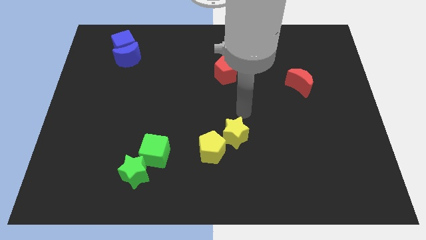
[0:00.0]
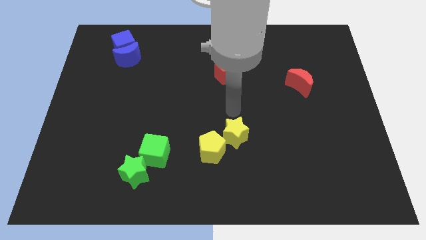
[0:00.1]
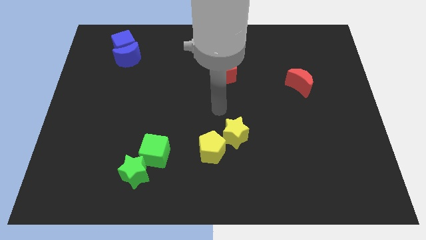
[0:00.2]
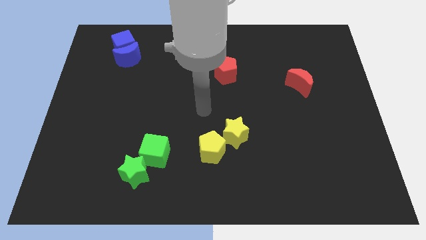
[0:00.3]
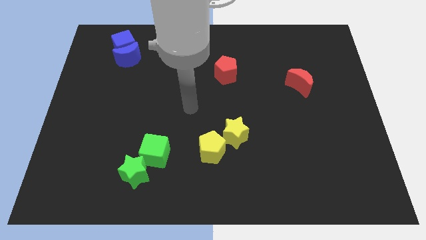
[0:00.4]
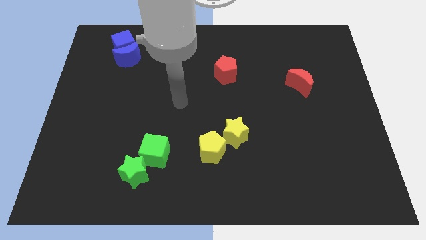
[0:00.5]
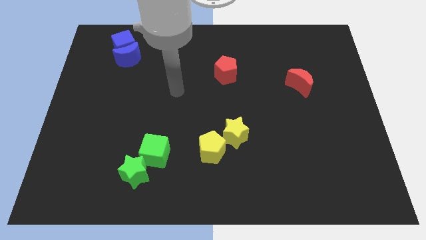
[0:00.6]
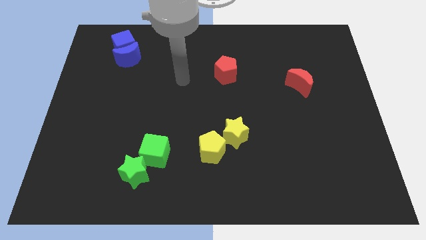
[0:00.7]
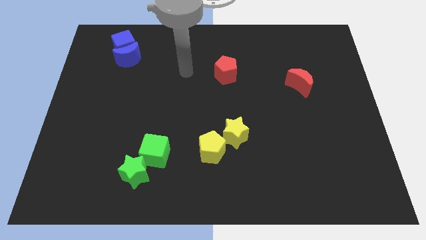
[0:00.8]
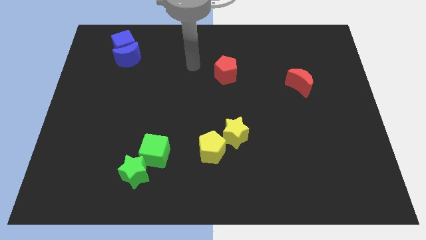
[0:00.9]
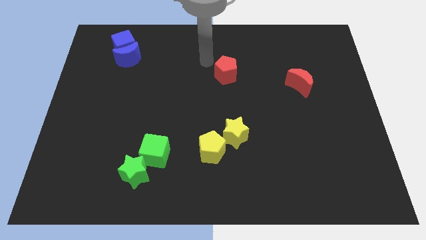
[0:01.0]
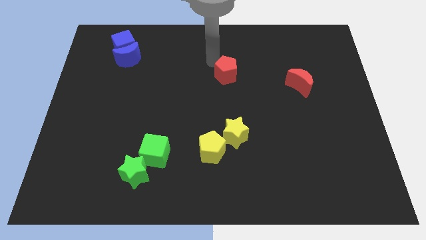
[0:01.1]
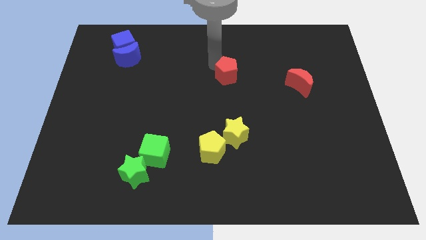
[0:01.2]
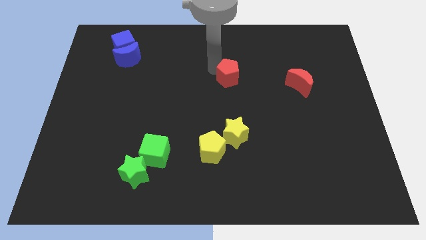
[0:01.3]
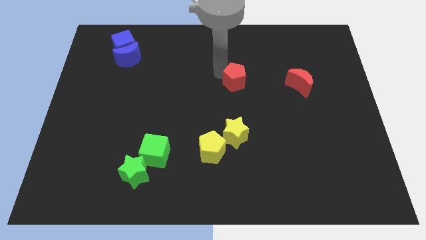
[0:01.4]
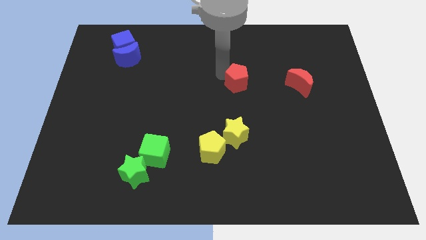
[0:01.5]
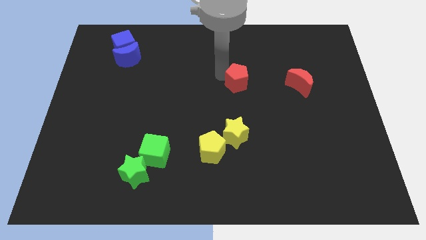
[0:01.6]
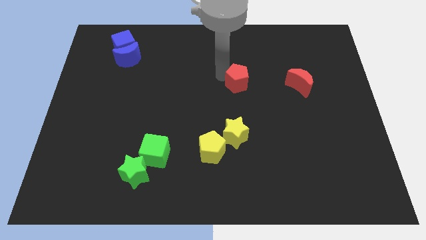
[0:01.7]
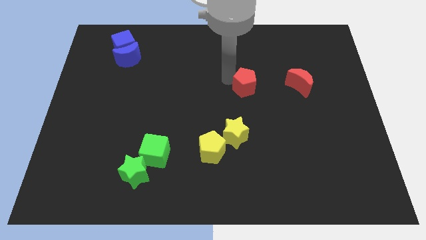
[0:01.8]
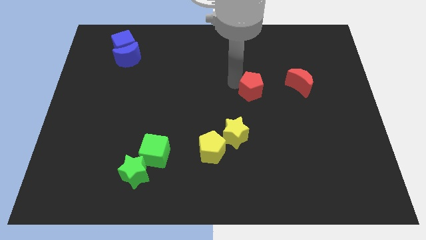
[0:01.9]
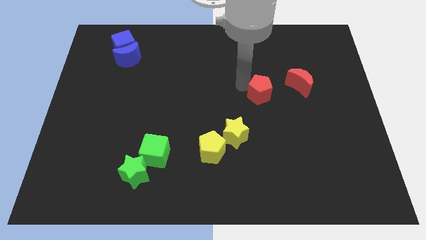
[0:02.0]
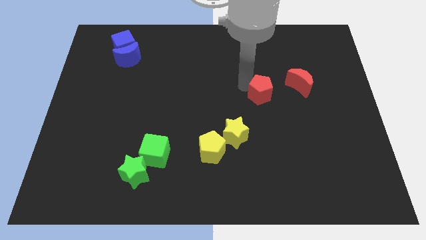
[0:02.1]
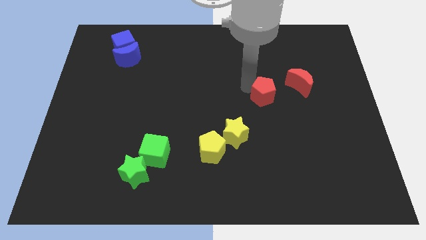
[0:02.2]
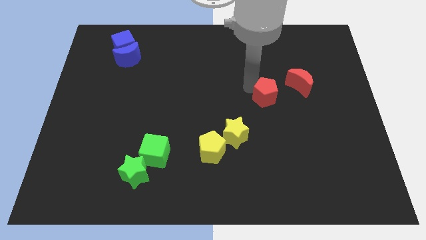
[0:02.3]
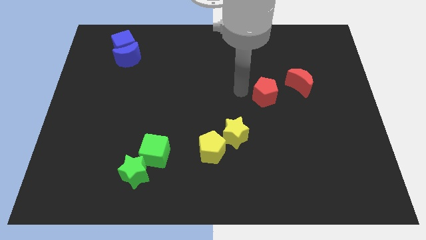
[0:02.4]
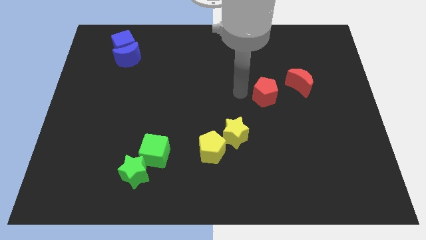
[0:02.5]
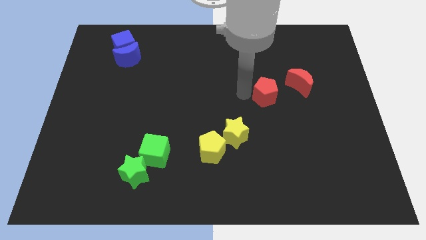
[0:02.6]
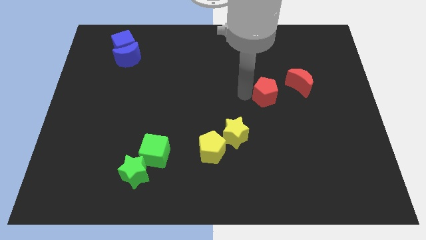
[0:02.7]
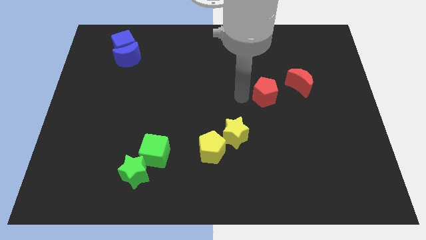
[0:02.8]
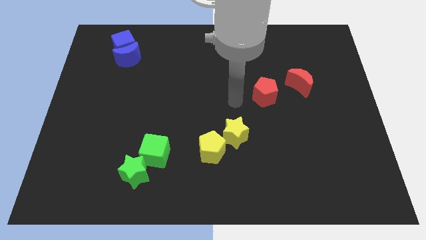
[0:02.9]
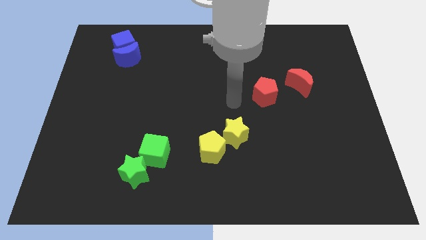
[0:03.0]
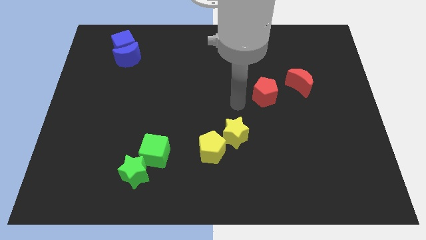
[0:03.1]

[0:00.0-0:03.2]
move red pentagon towards red moon

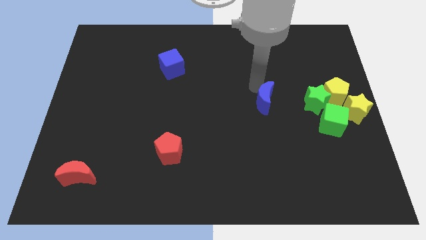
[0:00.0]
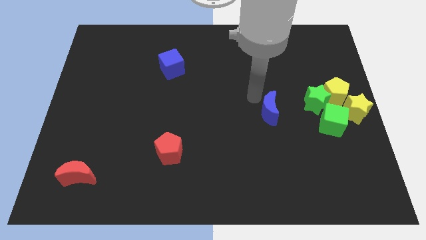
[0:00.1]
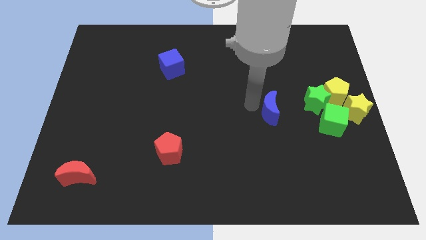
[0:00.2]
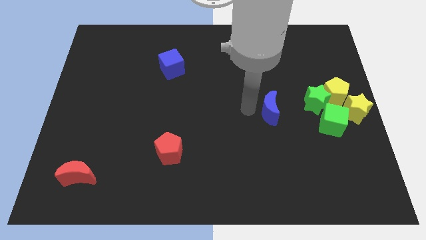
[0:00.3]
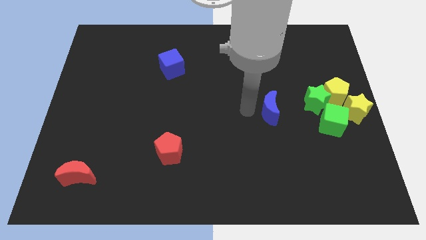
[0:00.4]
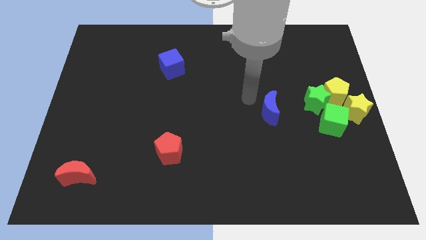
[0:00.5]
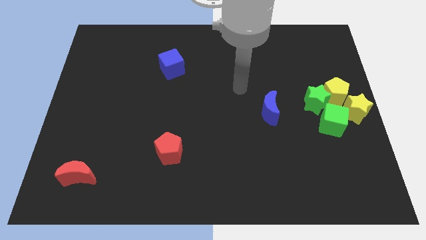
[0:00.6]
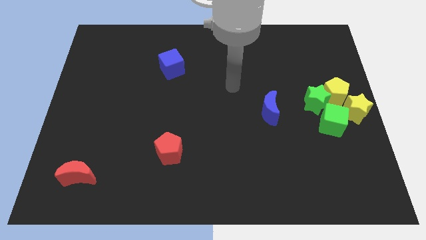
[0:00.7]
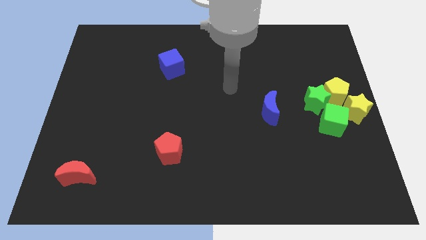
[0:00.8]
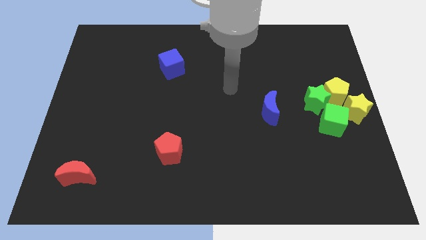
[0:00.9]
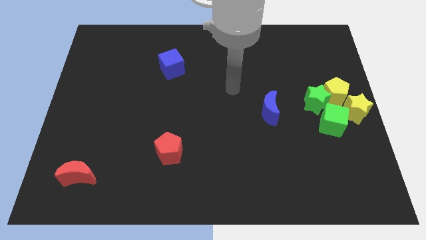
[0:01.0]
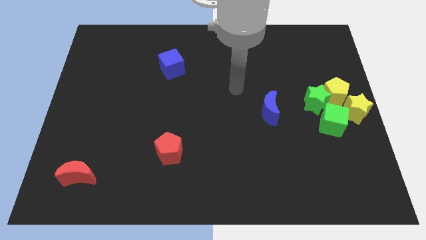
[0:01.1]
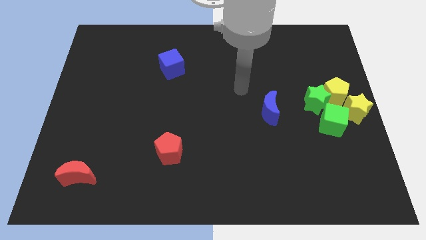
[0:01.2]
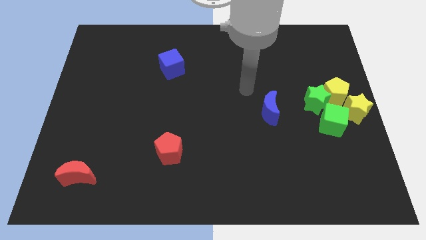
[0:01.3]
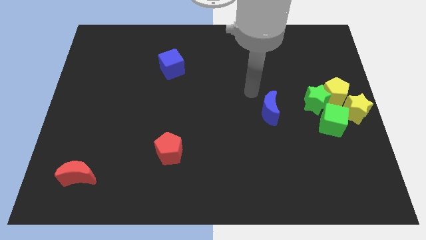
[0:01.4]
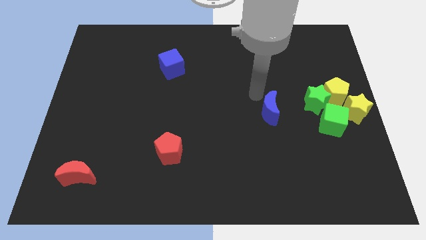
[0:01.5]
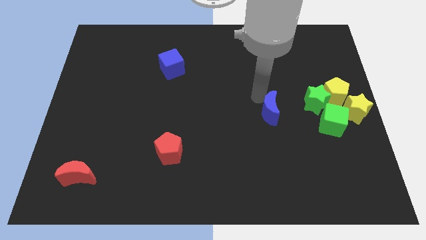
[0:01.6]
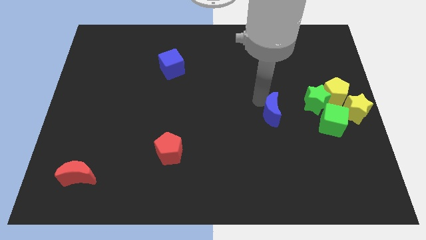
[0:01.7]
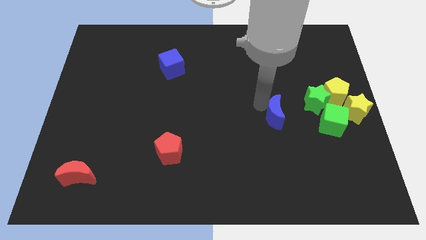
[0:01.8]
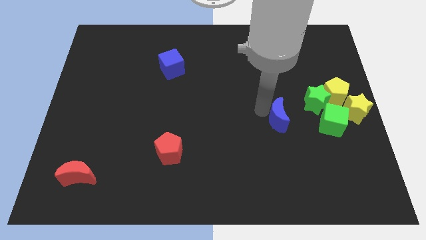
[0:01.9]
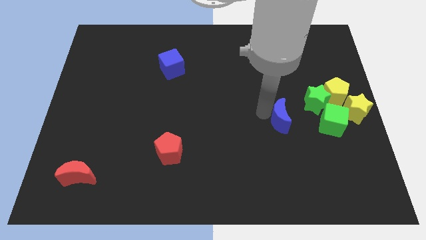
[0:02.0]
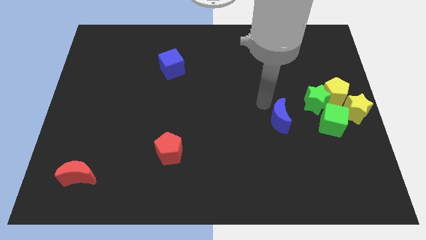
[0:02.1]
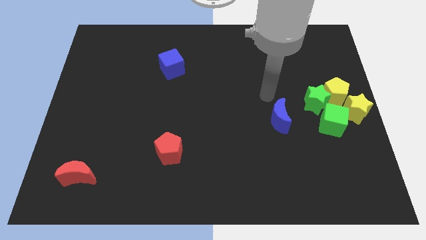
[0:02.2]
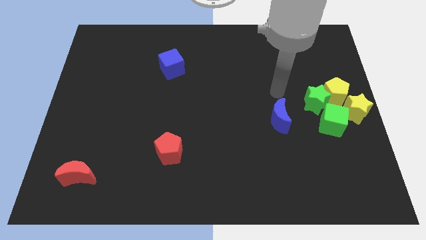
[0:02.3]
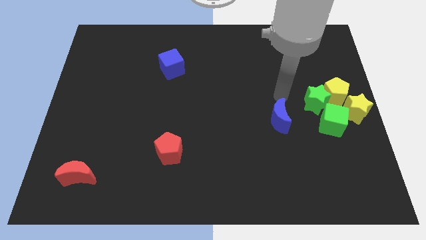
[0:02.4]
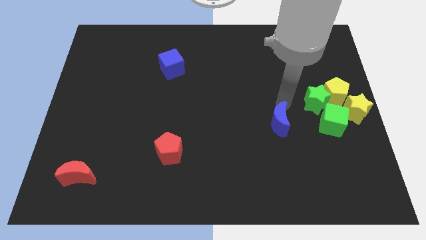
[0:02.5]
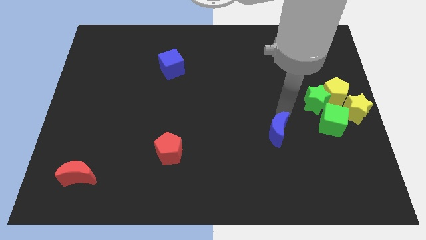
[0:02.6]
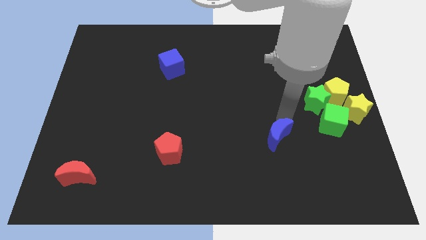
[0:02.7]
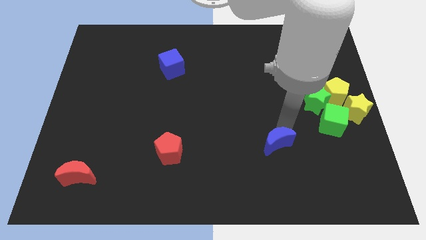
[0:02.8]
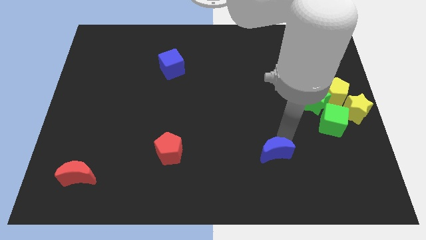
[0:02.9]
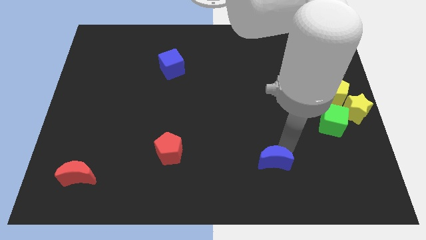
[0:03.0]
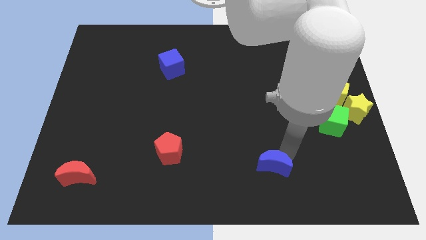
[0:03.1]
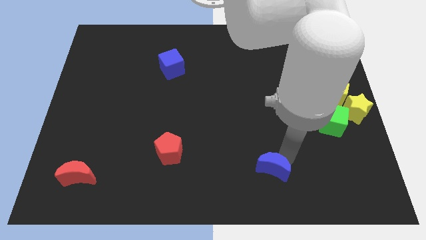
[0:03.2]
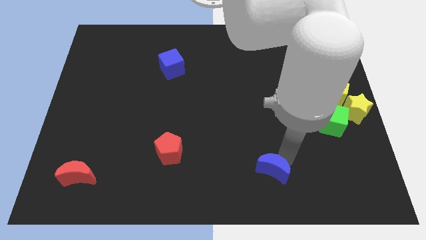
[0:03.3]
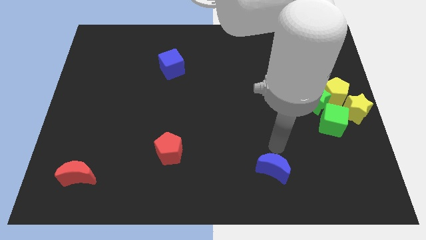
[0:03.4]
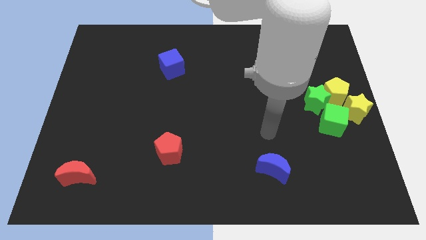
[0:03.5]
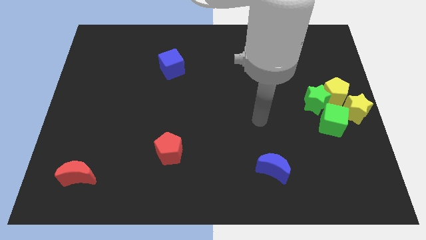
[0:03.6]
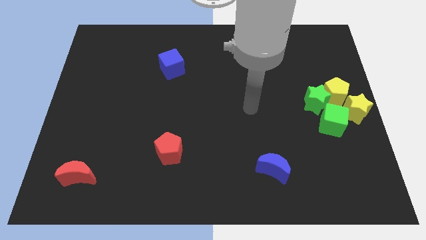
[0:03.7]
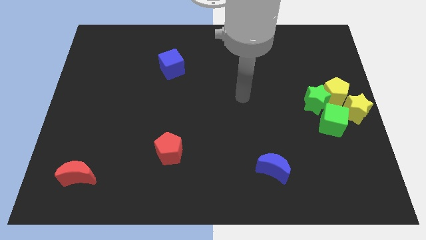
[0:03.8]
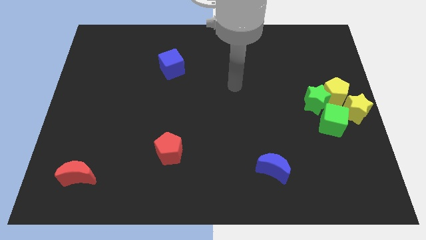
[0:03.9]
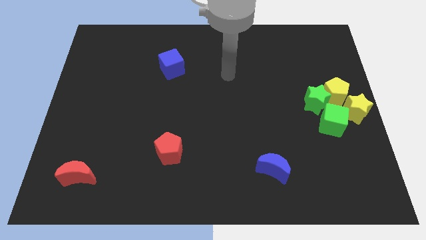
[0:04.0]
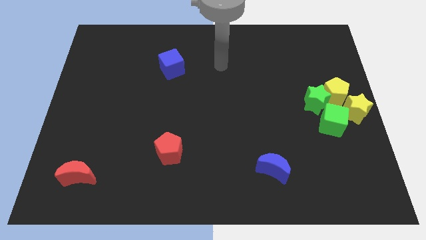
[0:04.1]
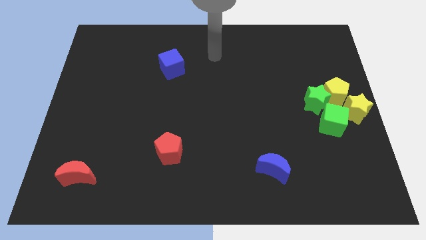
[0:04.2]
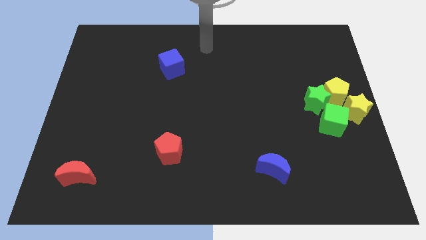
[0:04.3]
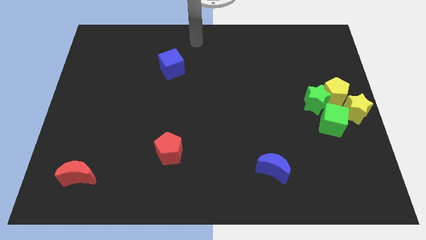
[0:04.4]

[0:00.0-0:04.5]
move blue moon to the bottom

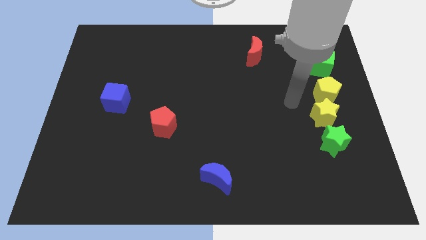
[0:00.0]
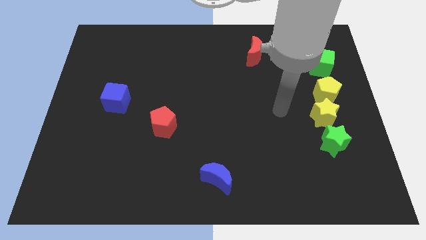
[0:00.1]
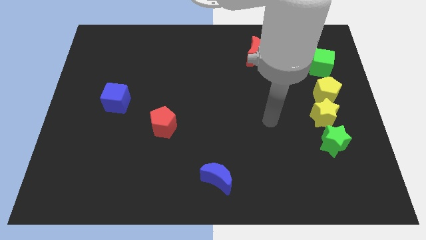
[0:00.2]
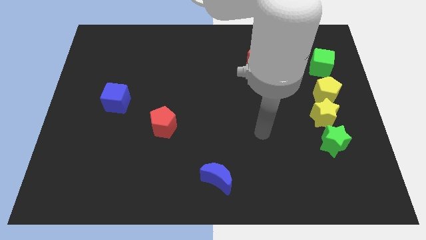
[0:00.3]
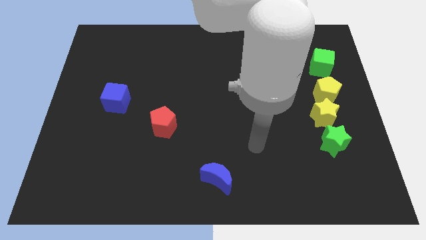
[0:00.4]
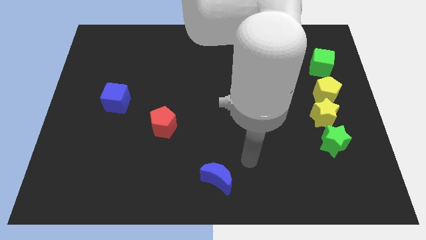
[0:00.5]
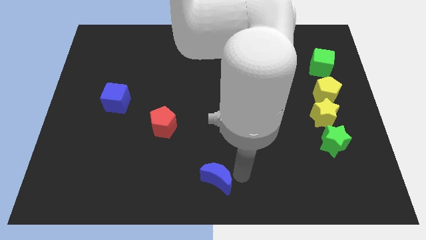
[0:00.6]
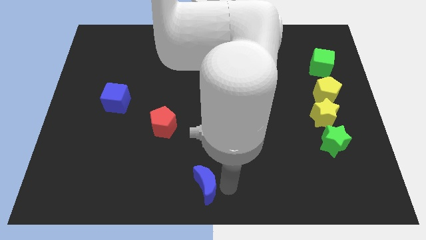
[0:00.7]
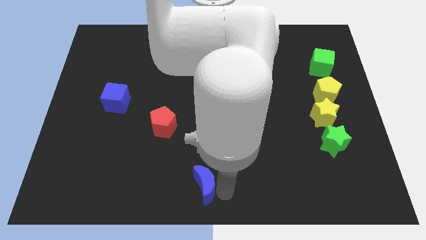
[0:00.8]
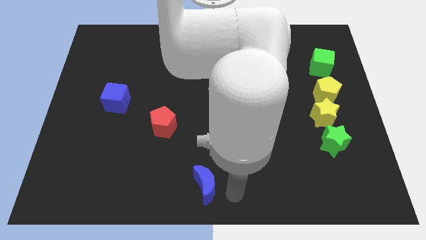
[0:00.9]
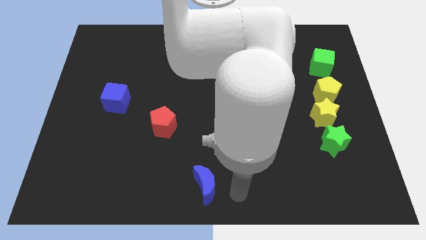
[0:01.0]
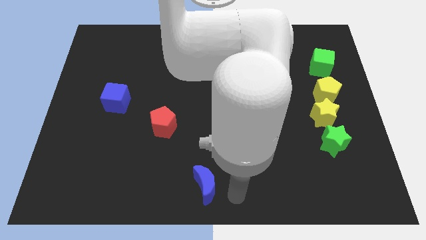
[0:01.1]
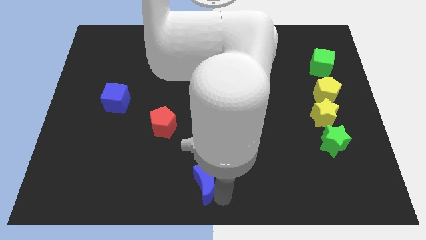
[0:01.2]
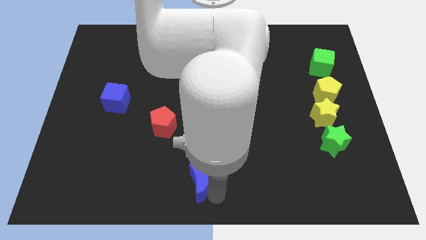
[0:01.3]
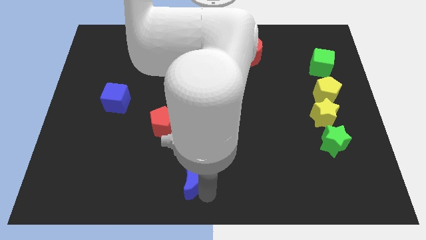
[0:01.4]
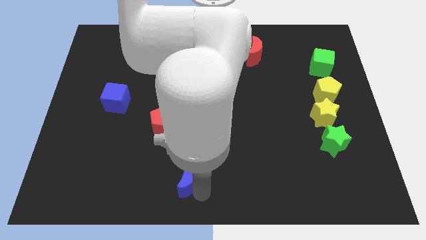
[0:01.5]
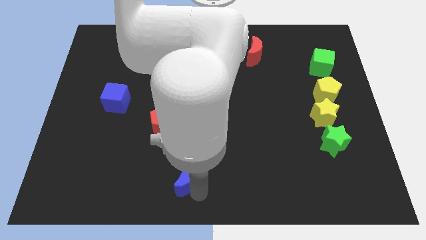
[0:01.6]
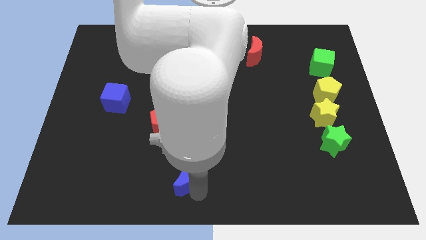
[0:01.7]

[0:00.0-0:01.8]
push the blue crescent slightly to the left
